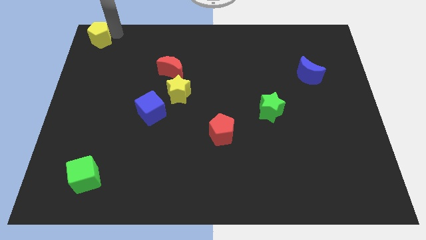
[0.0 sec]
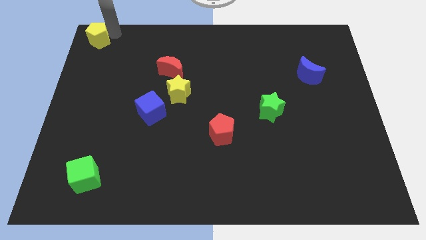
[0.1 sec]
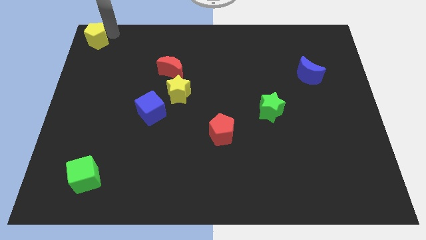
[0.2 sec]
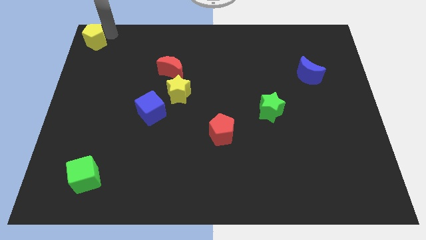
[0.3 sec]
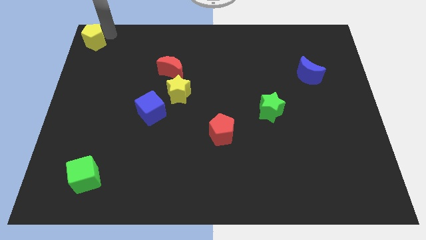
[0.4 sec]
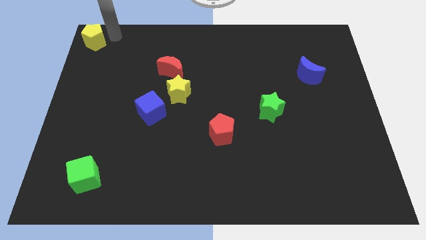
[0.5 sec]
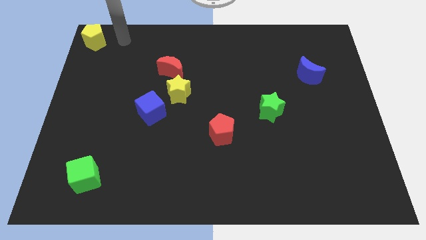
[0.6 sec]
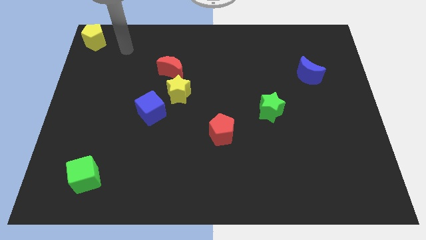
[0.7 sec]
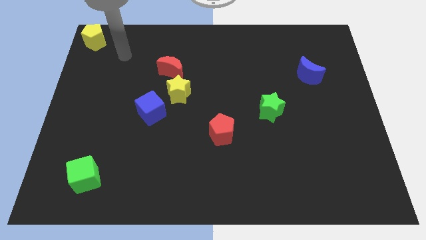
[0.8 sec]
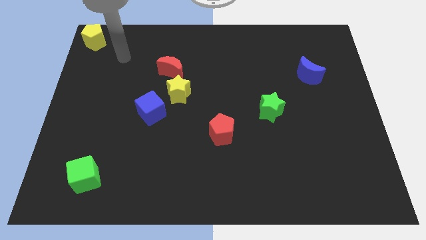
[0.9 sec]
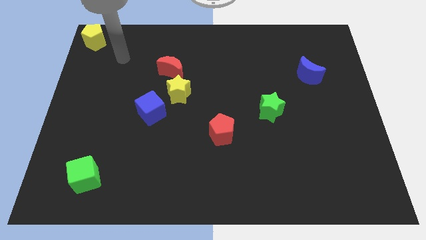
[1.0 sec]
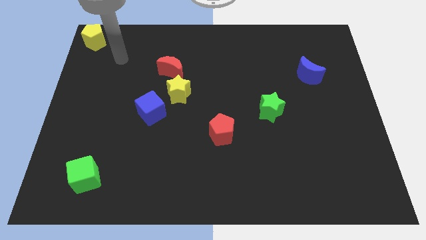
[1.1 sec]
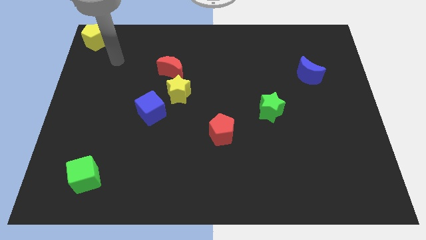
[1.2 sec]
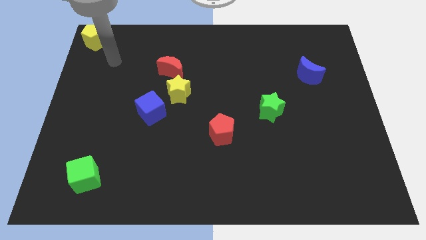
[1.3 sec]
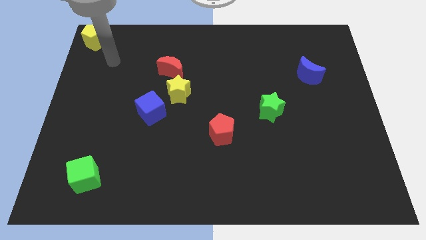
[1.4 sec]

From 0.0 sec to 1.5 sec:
move yellow pentagon to the top left corner

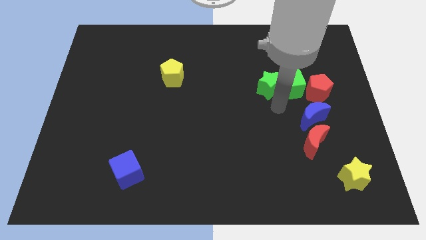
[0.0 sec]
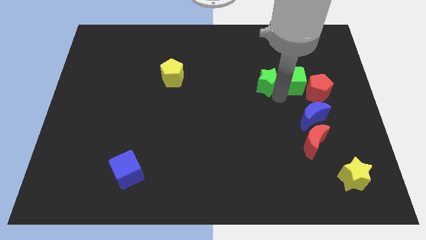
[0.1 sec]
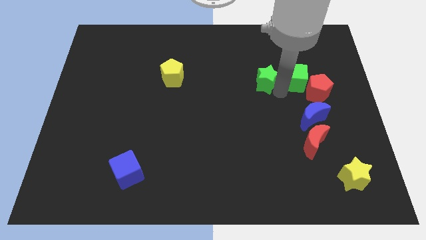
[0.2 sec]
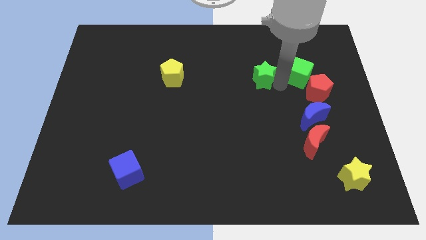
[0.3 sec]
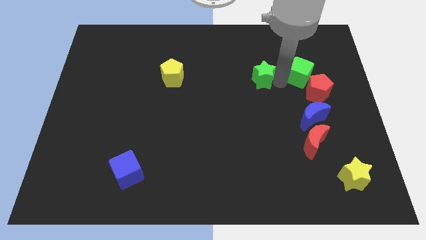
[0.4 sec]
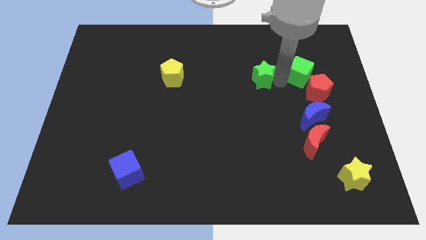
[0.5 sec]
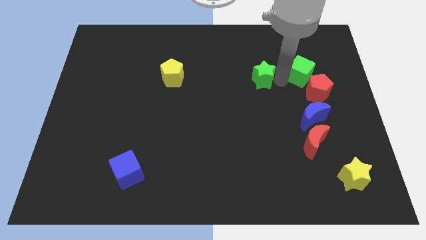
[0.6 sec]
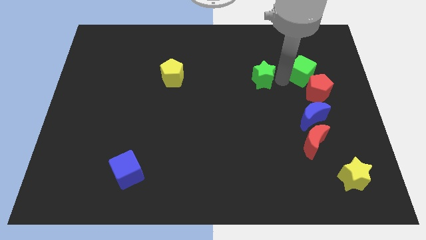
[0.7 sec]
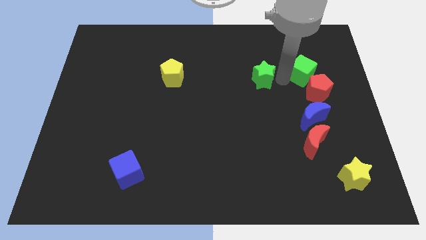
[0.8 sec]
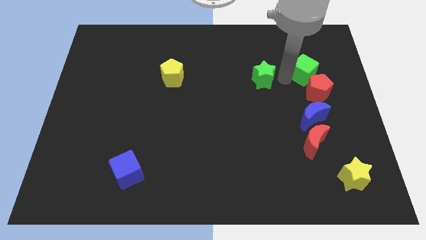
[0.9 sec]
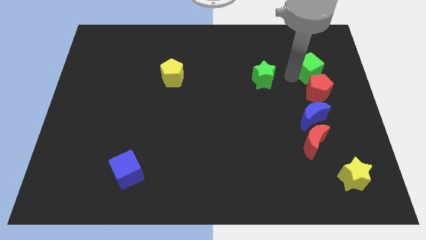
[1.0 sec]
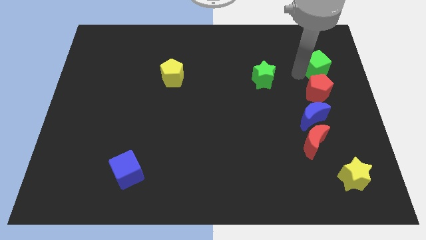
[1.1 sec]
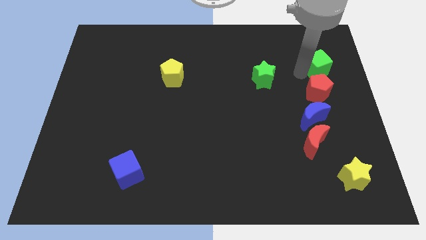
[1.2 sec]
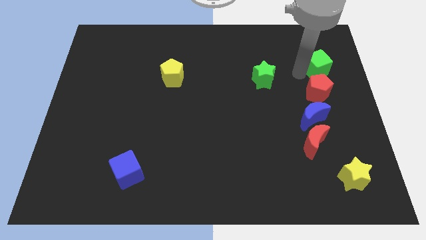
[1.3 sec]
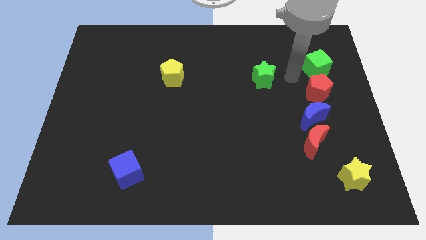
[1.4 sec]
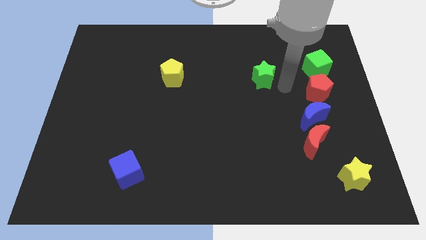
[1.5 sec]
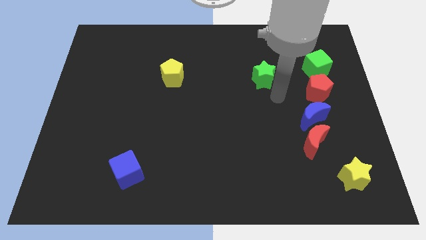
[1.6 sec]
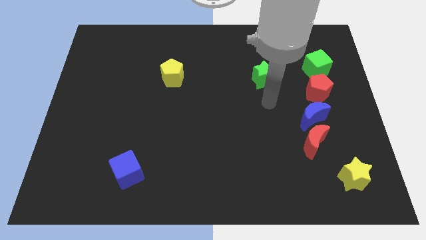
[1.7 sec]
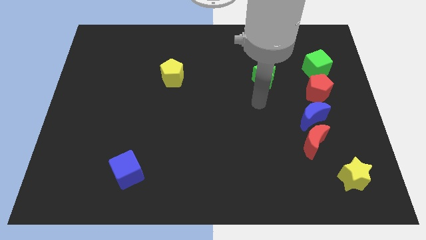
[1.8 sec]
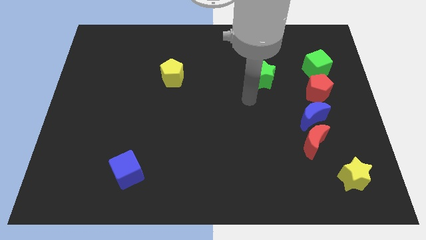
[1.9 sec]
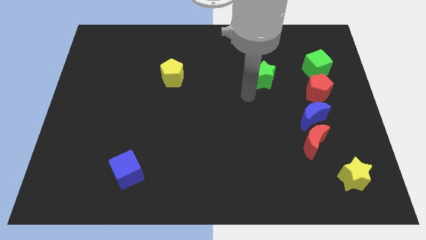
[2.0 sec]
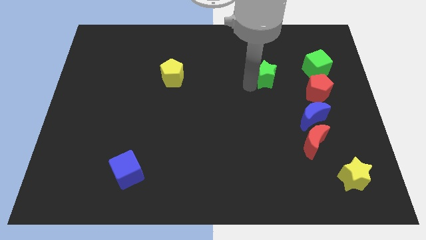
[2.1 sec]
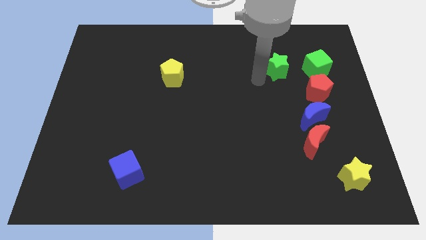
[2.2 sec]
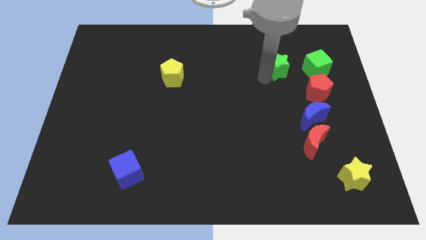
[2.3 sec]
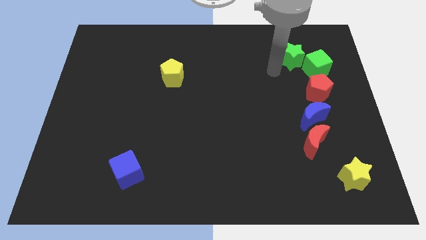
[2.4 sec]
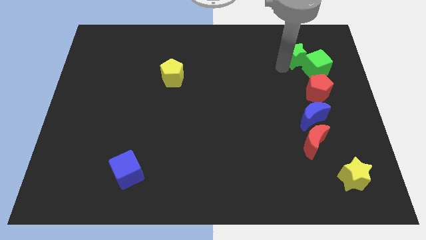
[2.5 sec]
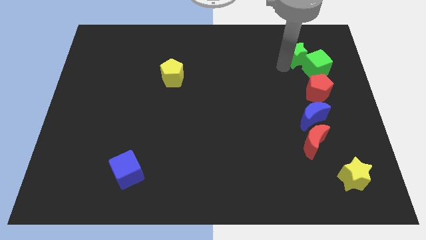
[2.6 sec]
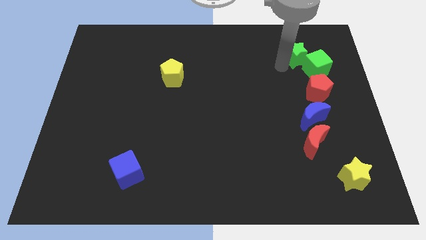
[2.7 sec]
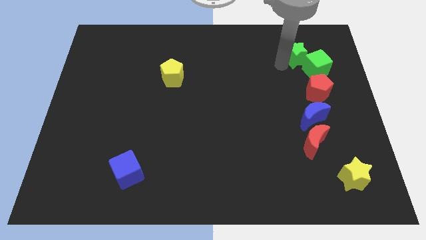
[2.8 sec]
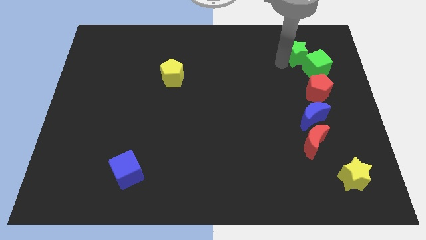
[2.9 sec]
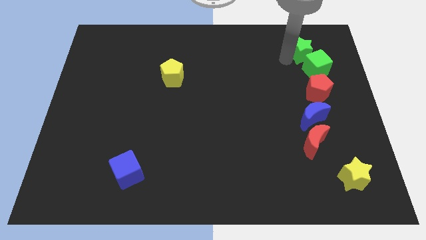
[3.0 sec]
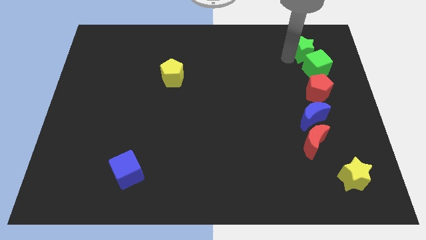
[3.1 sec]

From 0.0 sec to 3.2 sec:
separate green cube from the green star

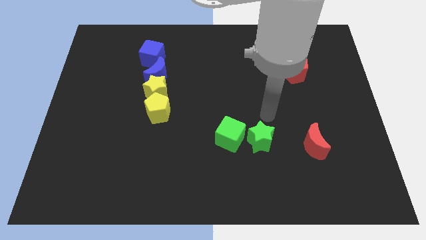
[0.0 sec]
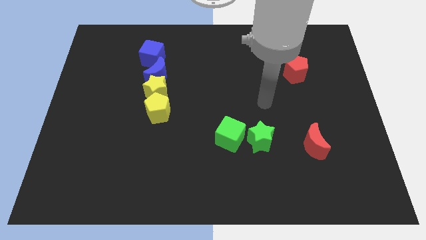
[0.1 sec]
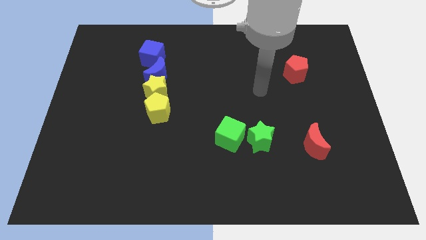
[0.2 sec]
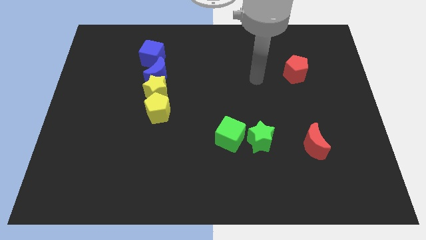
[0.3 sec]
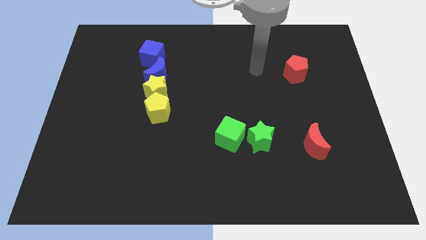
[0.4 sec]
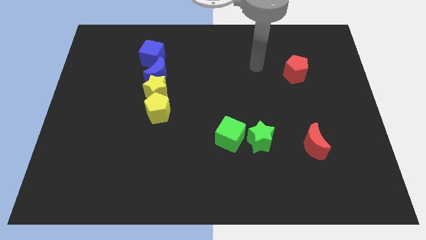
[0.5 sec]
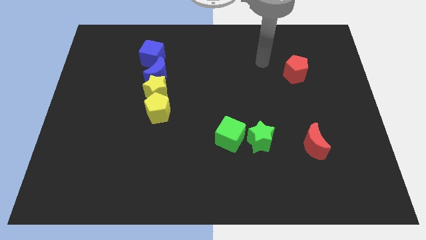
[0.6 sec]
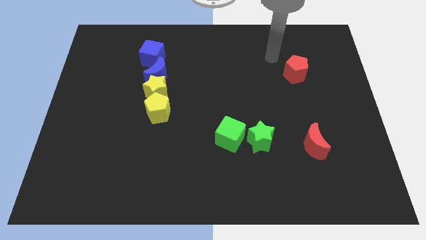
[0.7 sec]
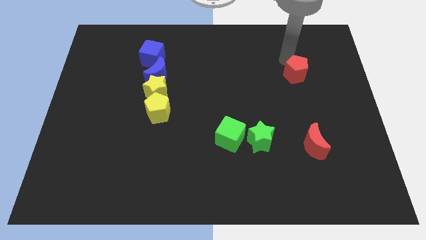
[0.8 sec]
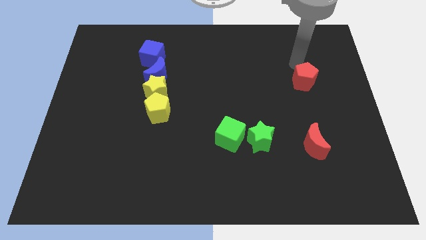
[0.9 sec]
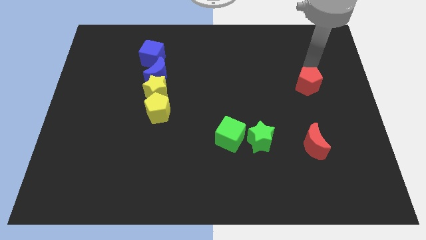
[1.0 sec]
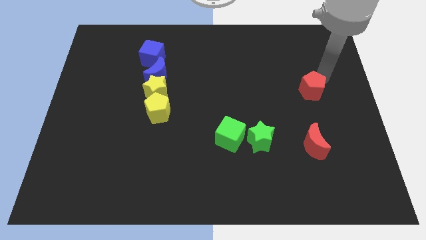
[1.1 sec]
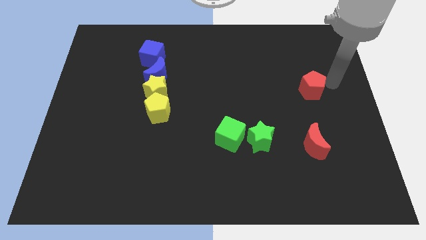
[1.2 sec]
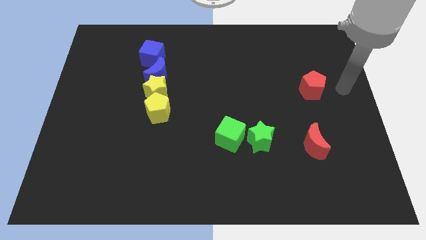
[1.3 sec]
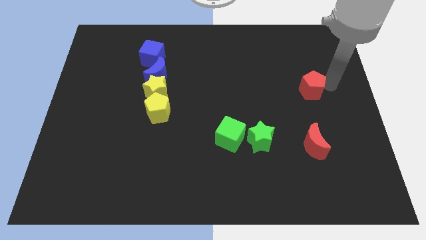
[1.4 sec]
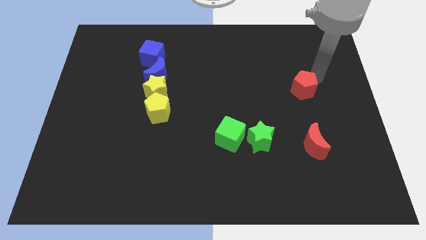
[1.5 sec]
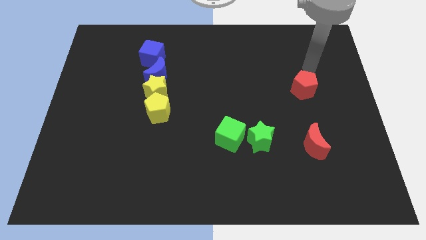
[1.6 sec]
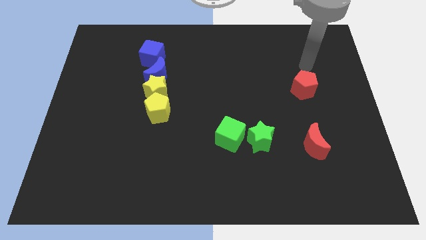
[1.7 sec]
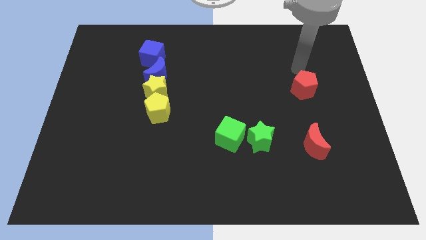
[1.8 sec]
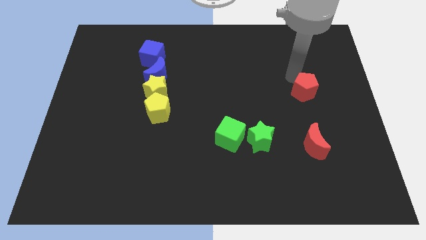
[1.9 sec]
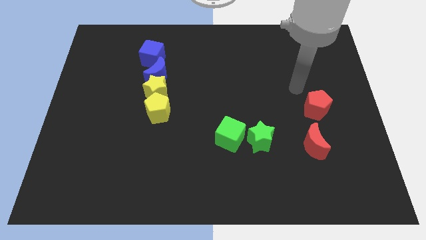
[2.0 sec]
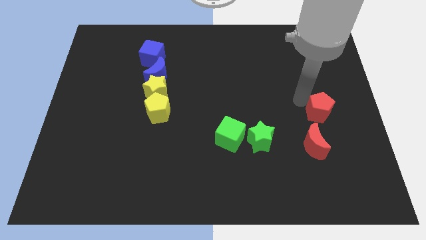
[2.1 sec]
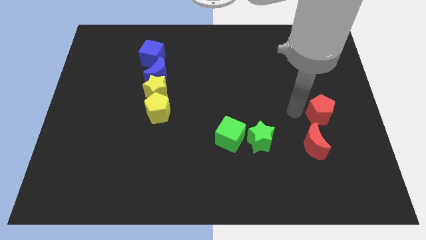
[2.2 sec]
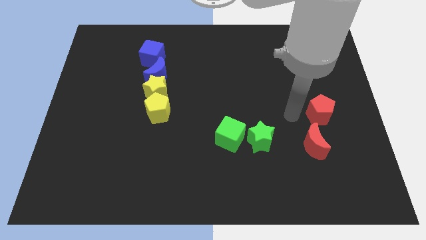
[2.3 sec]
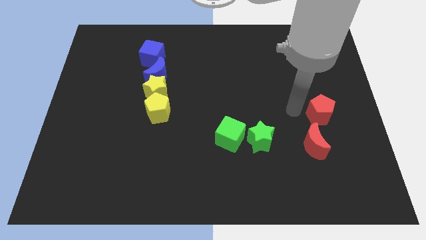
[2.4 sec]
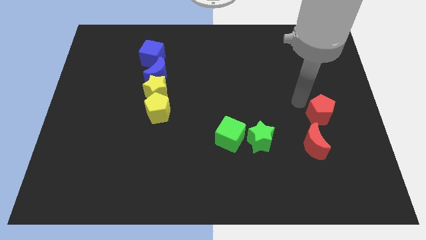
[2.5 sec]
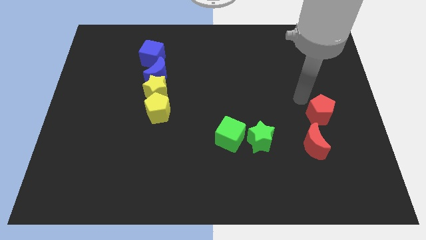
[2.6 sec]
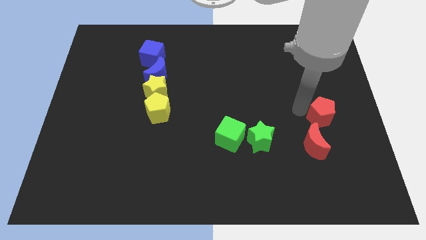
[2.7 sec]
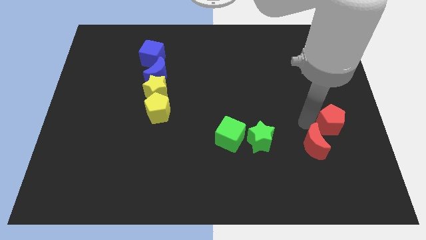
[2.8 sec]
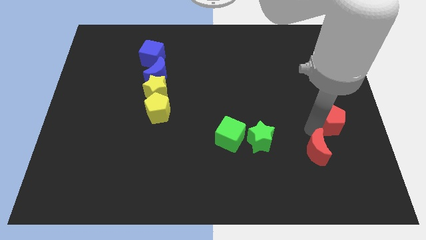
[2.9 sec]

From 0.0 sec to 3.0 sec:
place the red pentagon close to the red crescent

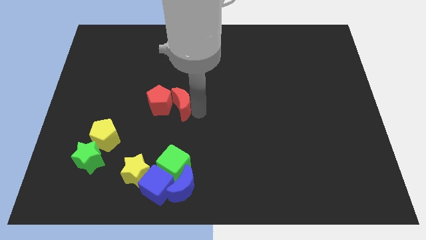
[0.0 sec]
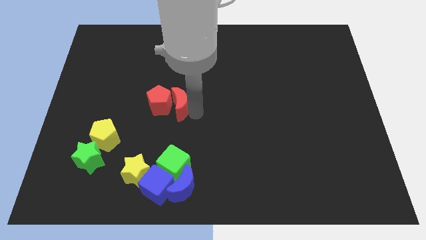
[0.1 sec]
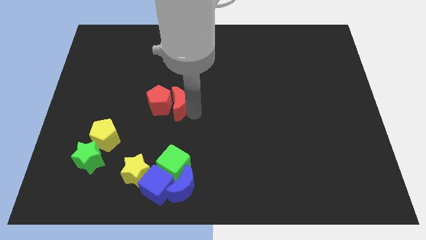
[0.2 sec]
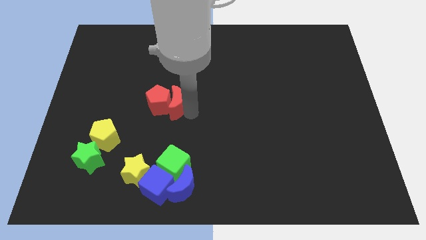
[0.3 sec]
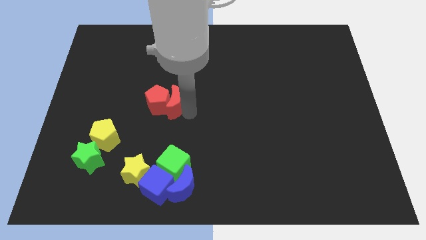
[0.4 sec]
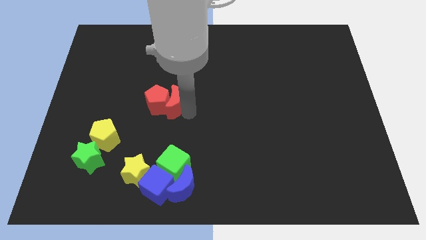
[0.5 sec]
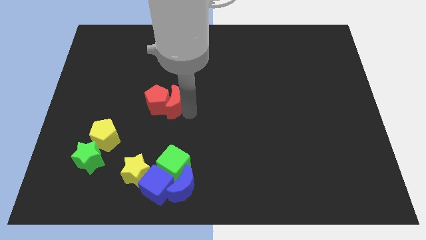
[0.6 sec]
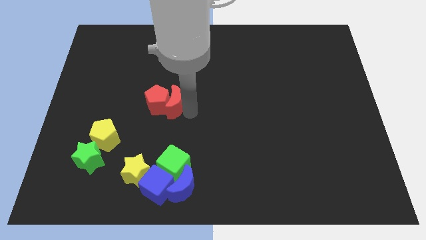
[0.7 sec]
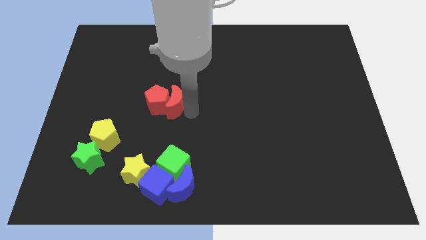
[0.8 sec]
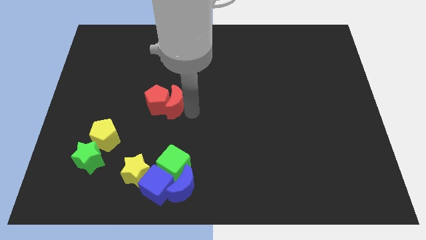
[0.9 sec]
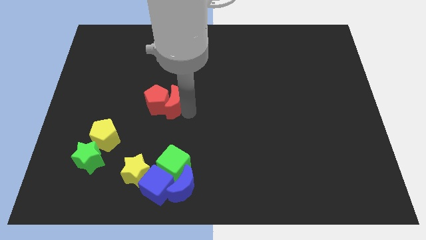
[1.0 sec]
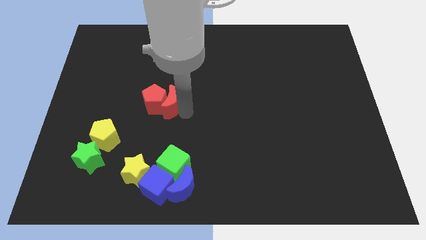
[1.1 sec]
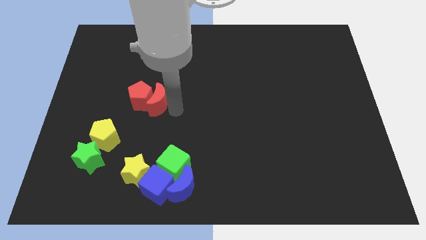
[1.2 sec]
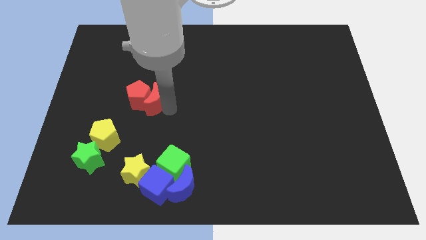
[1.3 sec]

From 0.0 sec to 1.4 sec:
move the red crescent along with red pentagon slightly towards left to the board
